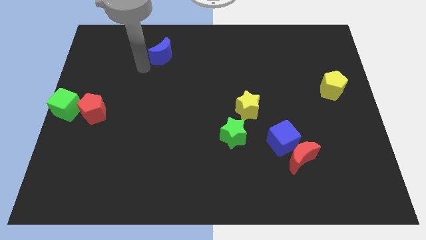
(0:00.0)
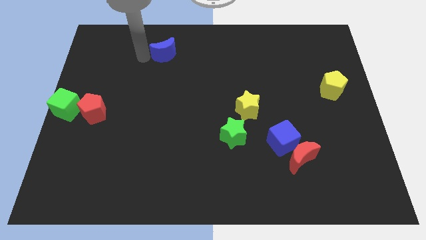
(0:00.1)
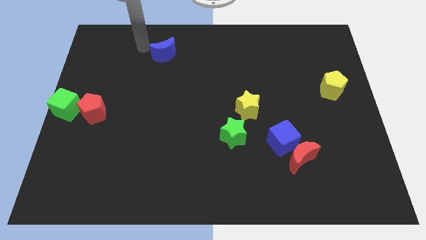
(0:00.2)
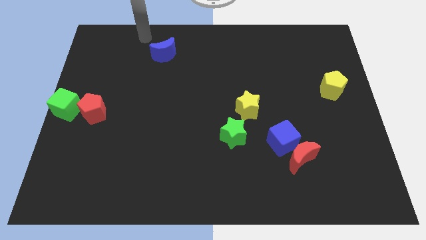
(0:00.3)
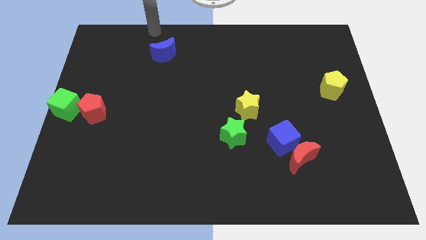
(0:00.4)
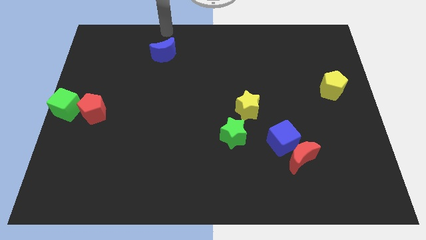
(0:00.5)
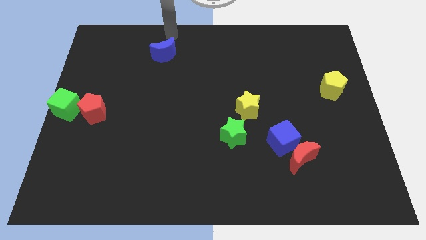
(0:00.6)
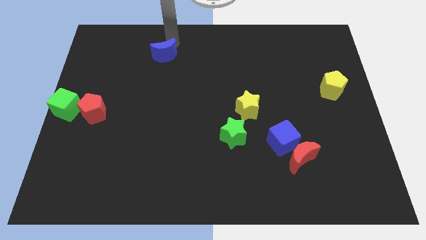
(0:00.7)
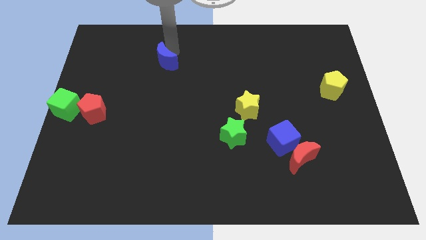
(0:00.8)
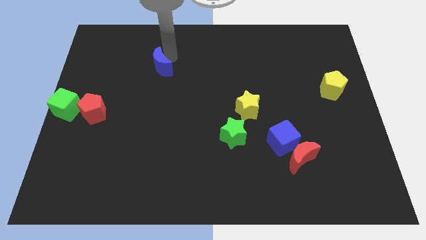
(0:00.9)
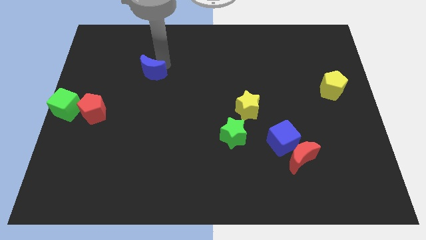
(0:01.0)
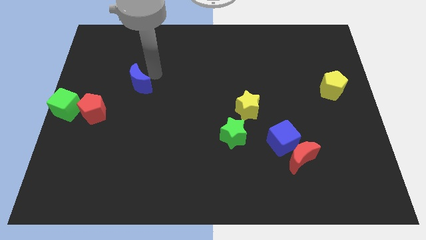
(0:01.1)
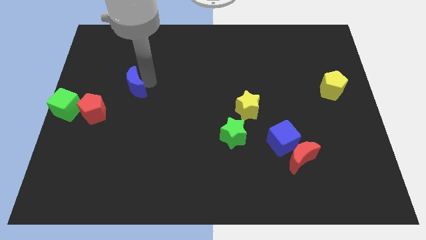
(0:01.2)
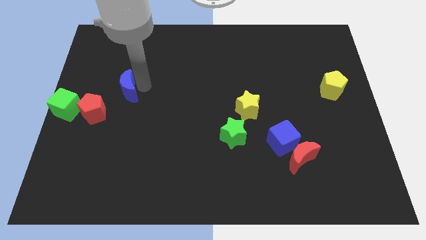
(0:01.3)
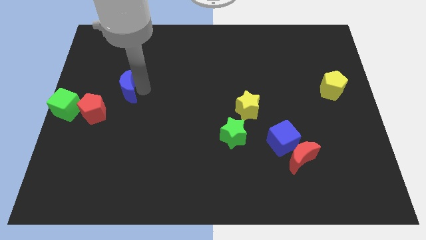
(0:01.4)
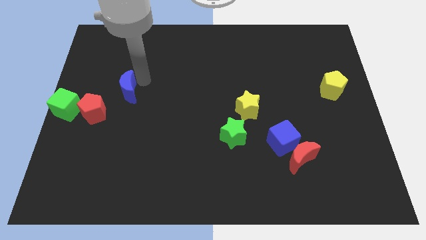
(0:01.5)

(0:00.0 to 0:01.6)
push the blue moon towards the top right side of the red pentagon

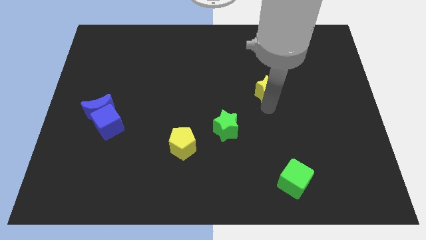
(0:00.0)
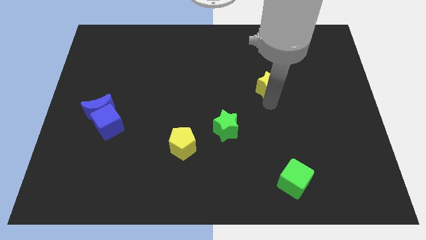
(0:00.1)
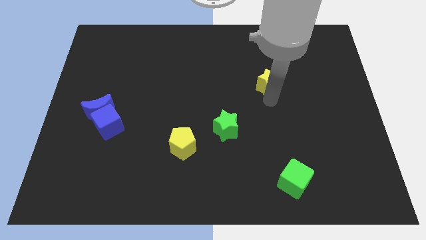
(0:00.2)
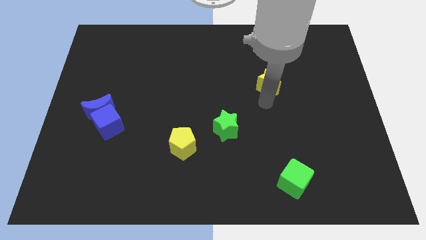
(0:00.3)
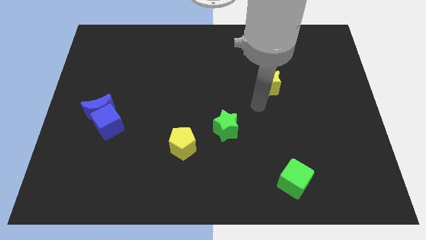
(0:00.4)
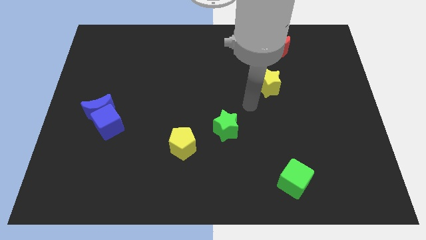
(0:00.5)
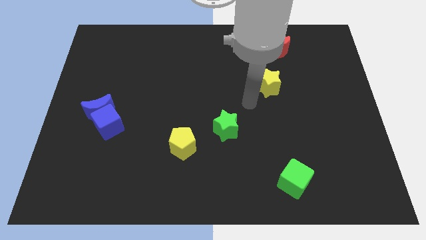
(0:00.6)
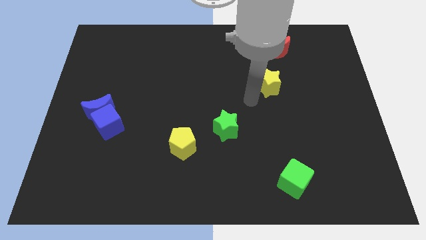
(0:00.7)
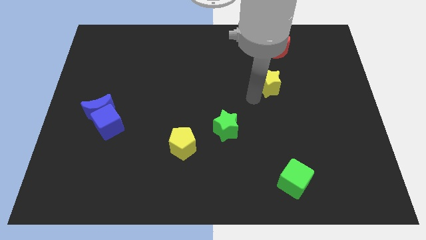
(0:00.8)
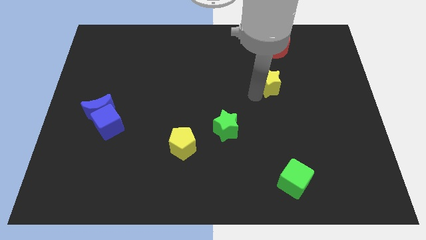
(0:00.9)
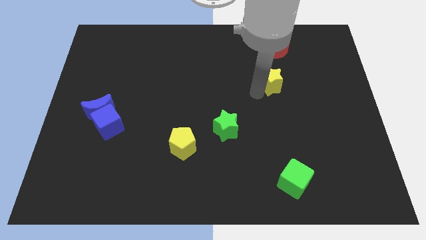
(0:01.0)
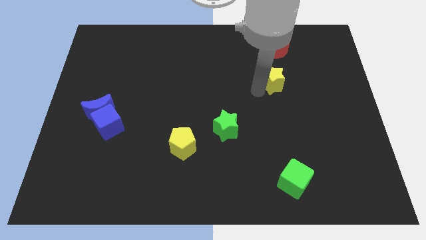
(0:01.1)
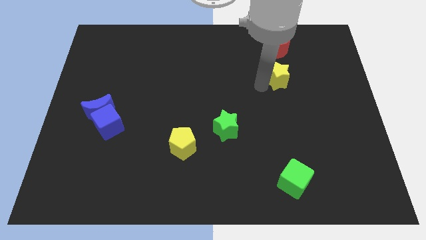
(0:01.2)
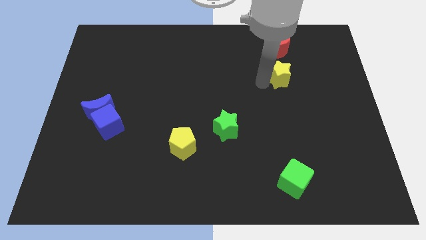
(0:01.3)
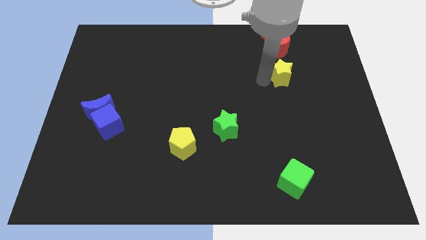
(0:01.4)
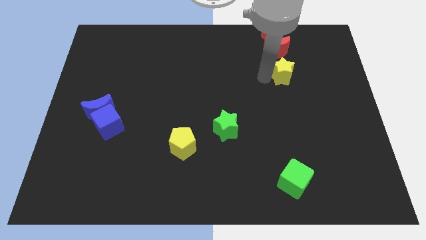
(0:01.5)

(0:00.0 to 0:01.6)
move the yellow star to the bottom of the red crescent

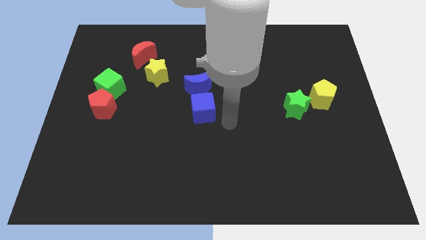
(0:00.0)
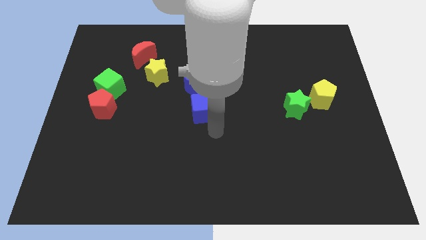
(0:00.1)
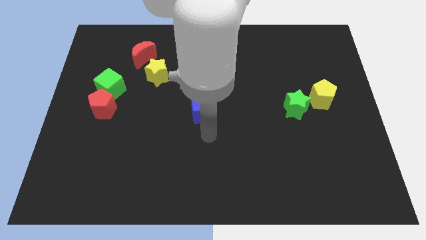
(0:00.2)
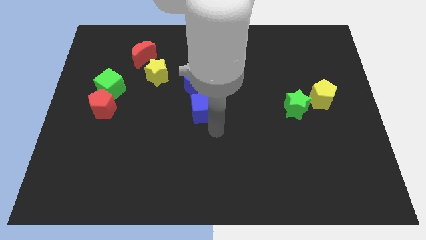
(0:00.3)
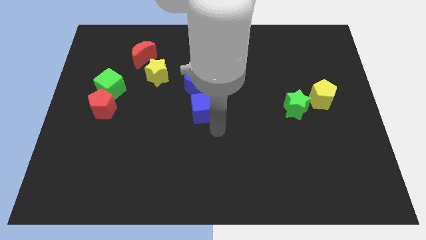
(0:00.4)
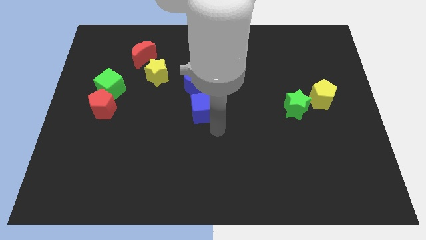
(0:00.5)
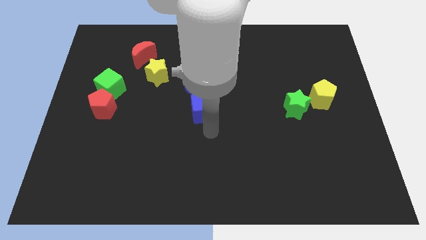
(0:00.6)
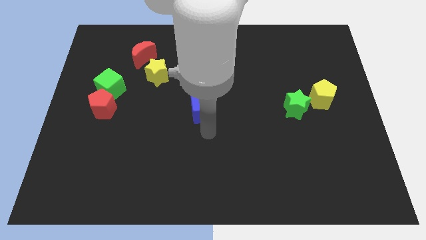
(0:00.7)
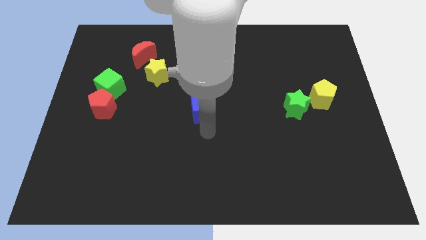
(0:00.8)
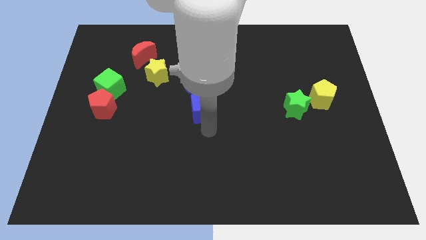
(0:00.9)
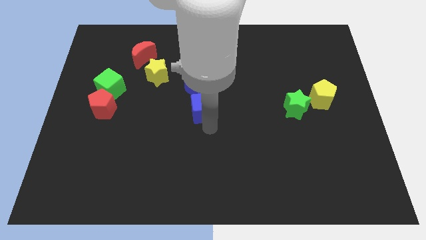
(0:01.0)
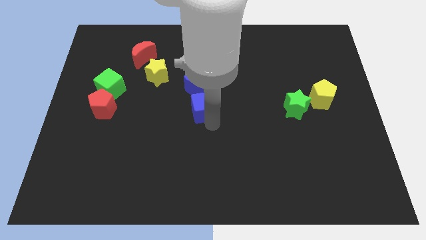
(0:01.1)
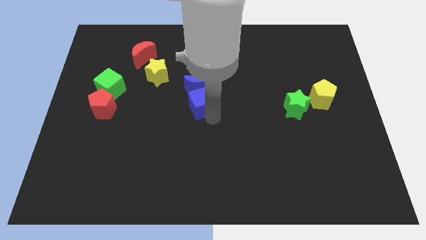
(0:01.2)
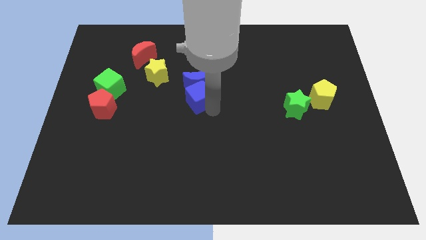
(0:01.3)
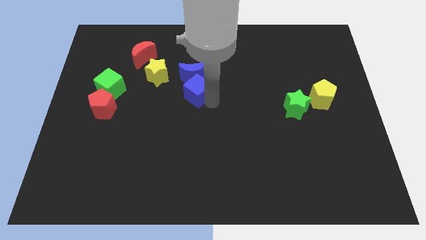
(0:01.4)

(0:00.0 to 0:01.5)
push the blue cube into the blue crescent

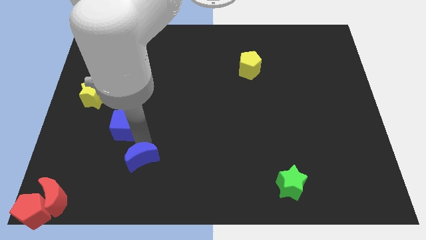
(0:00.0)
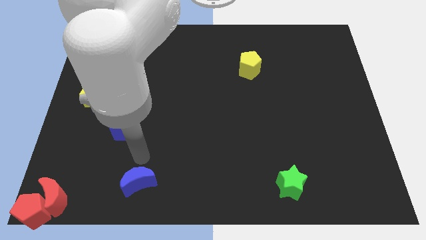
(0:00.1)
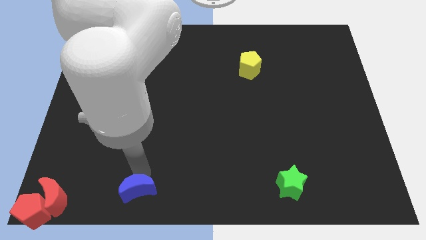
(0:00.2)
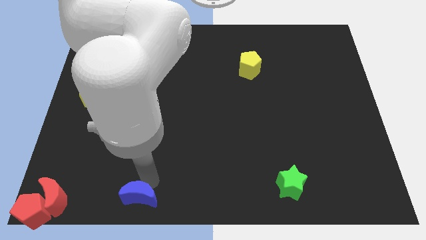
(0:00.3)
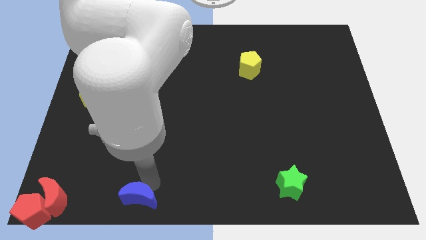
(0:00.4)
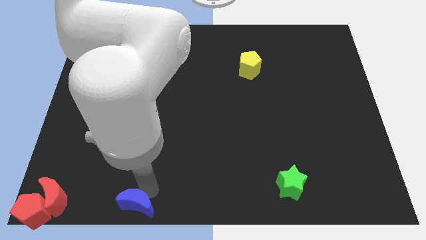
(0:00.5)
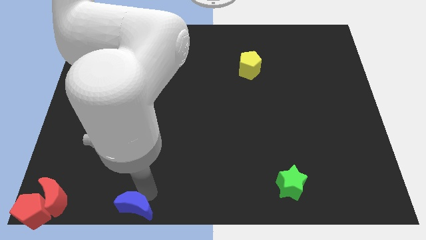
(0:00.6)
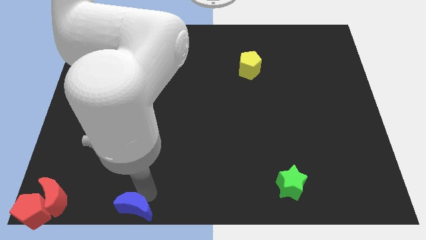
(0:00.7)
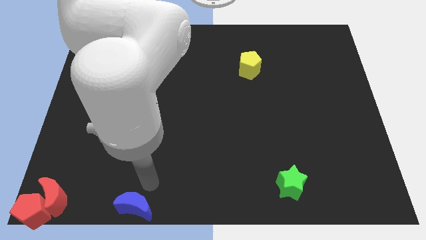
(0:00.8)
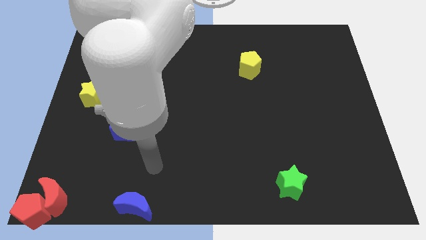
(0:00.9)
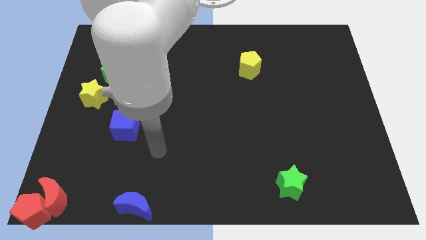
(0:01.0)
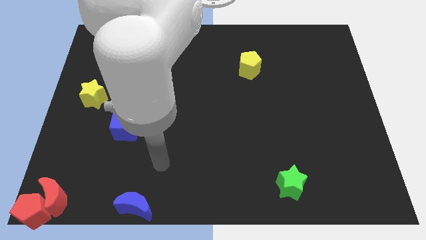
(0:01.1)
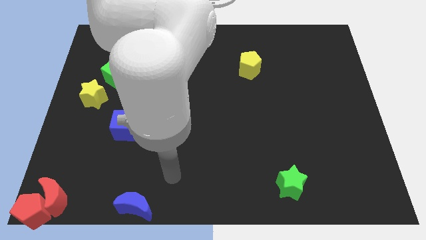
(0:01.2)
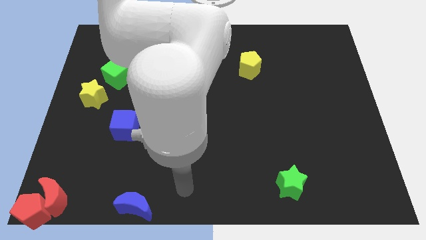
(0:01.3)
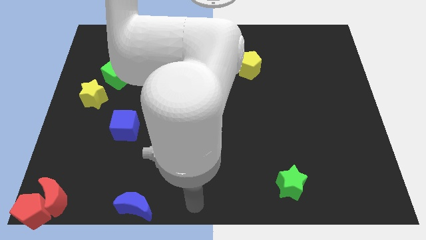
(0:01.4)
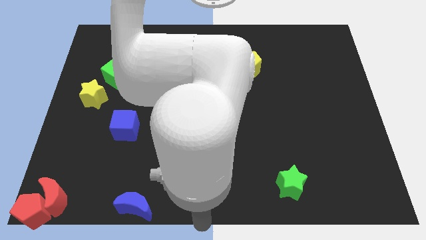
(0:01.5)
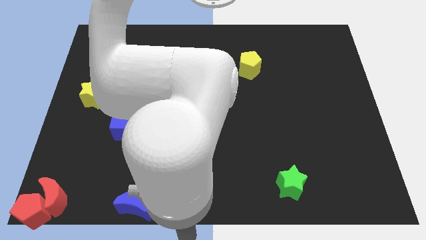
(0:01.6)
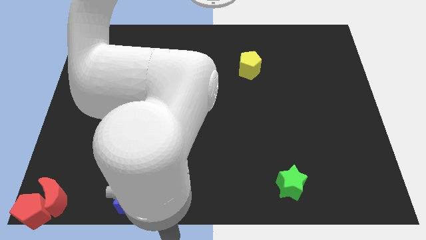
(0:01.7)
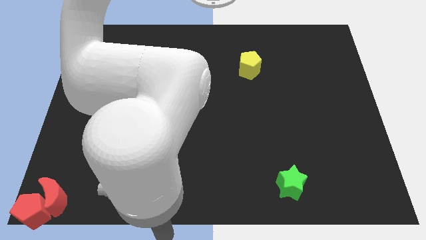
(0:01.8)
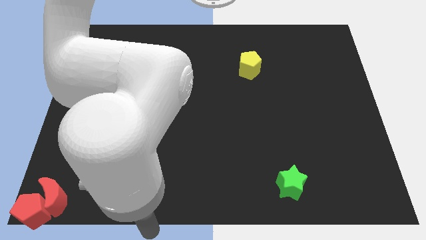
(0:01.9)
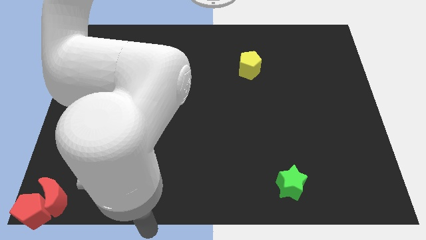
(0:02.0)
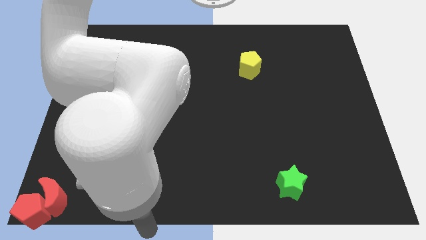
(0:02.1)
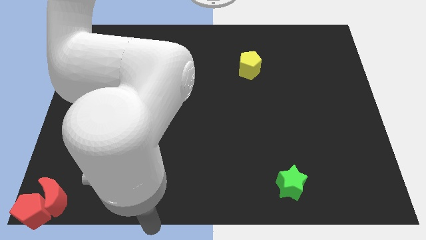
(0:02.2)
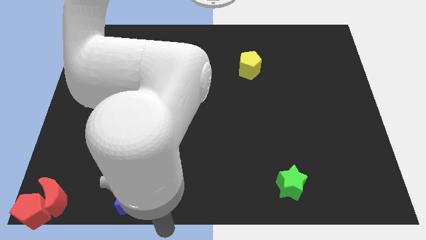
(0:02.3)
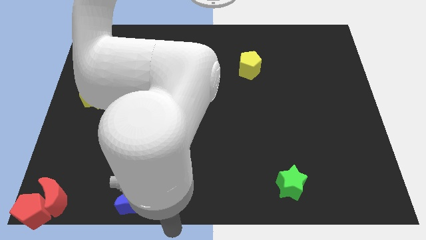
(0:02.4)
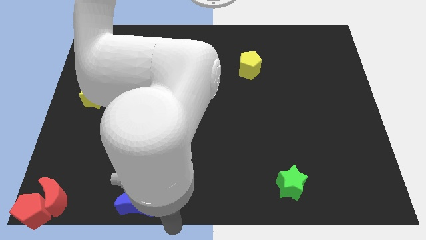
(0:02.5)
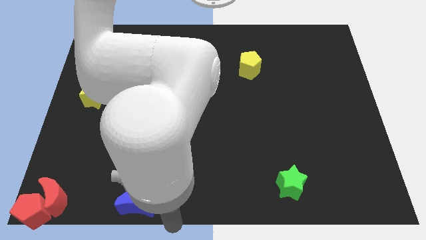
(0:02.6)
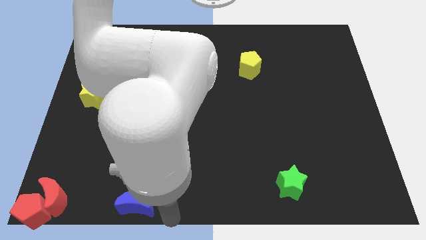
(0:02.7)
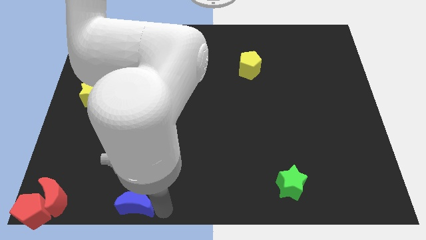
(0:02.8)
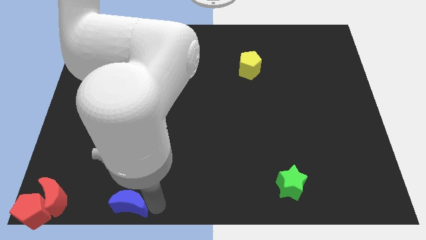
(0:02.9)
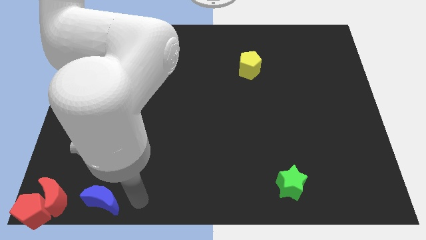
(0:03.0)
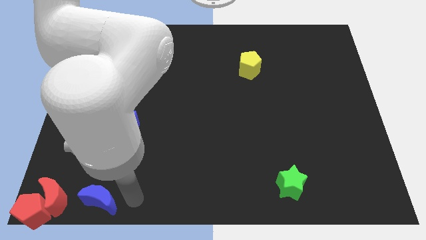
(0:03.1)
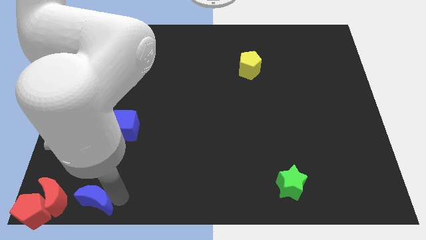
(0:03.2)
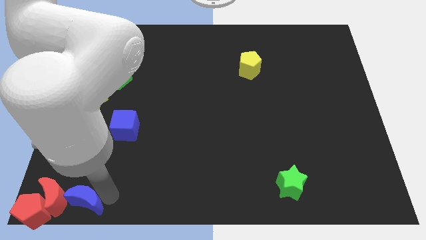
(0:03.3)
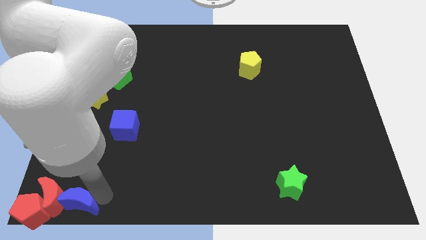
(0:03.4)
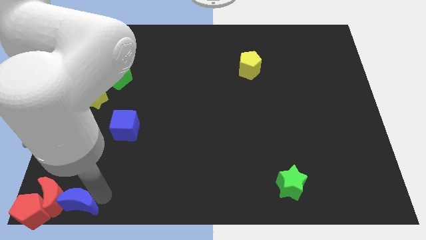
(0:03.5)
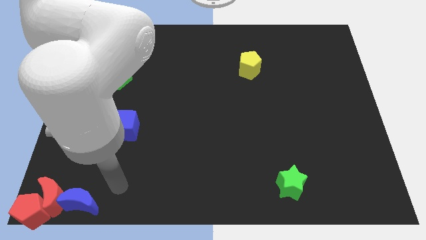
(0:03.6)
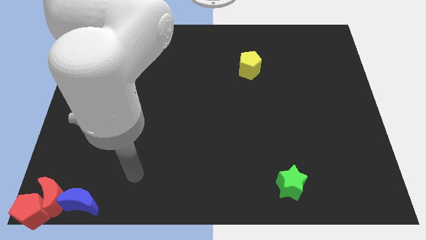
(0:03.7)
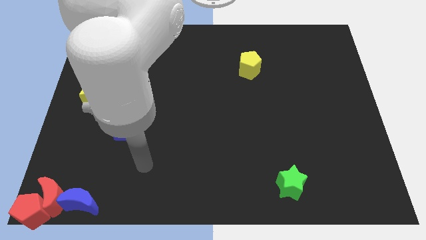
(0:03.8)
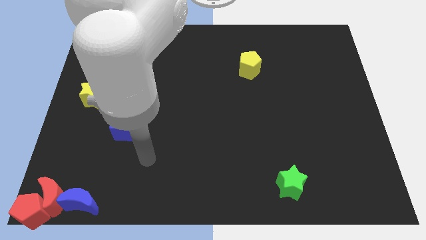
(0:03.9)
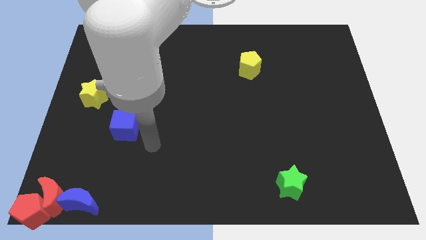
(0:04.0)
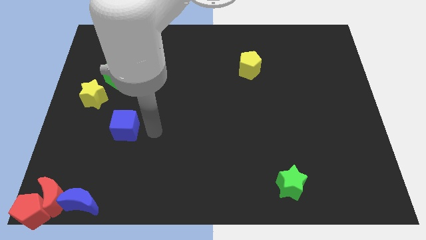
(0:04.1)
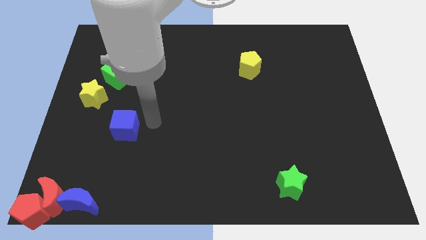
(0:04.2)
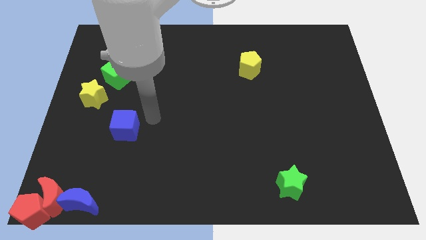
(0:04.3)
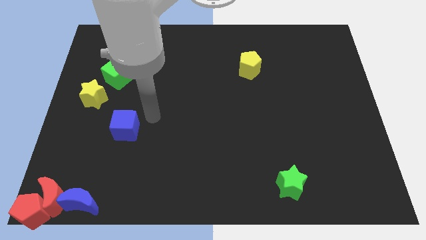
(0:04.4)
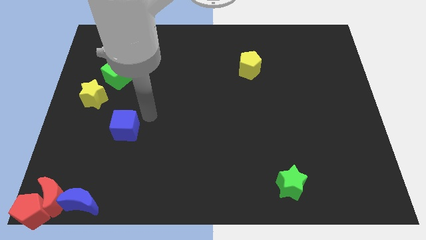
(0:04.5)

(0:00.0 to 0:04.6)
move the blue moon into the red moon
